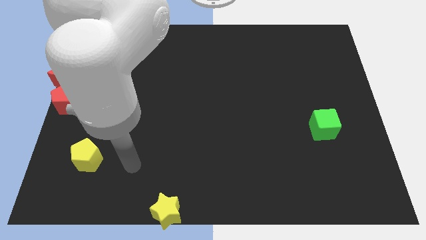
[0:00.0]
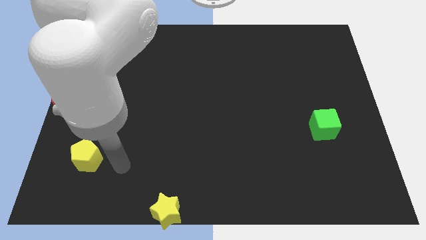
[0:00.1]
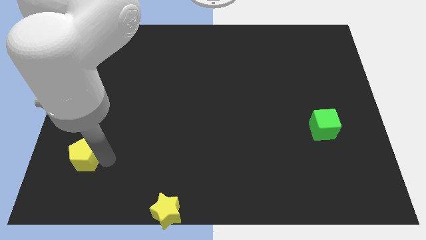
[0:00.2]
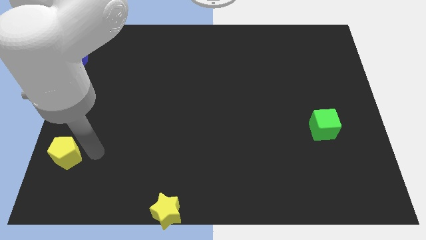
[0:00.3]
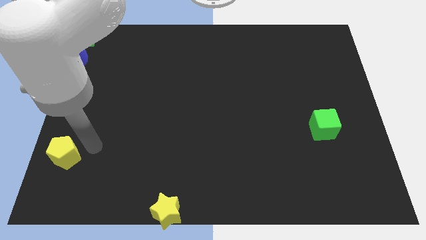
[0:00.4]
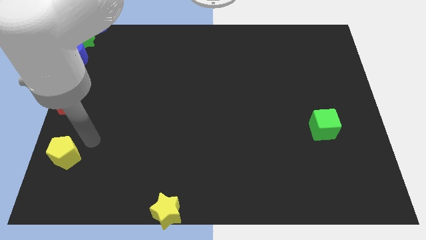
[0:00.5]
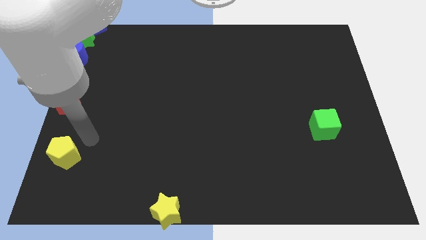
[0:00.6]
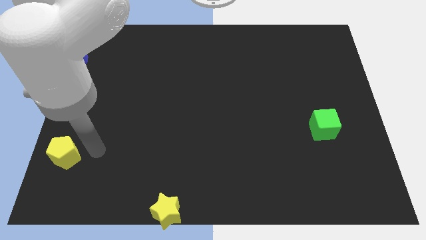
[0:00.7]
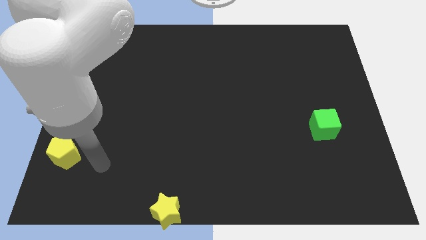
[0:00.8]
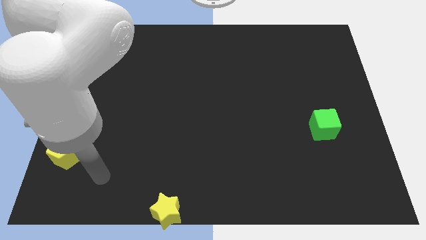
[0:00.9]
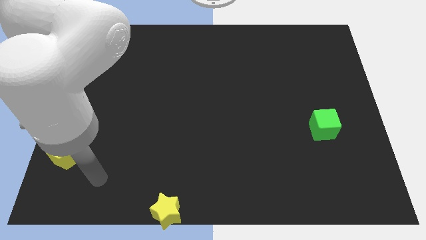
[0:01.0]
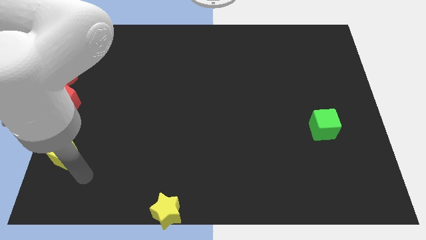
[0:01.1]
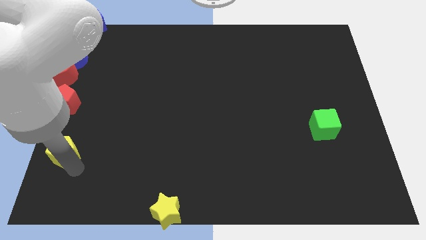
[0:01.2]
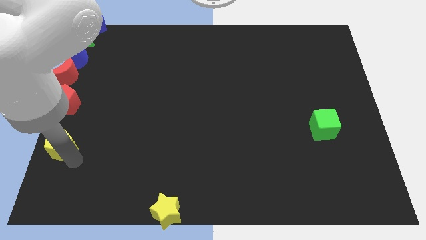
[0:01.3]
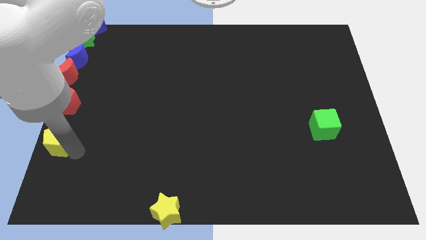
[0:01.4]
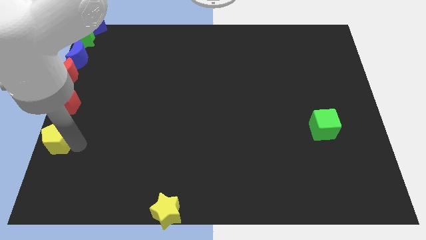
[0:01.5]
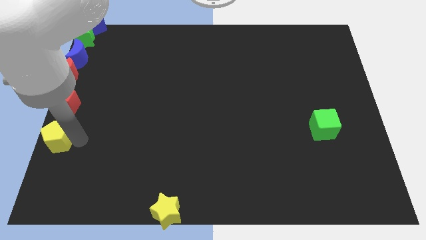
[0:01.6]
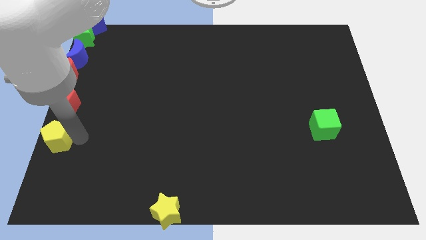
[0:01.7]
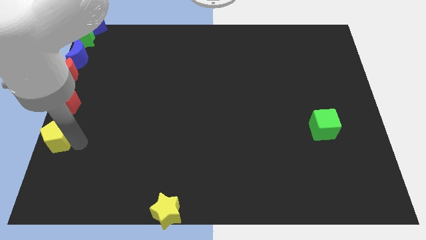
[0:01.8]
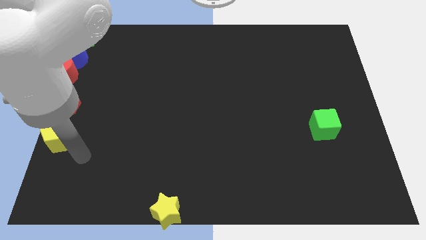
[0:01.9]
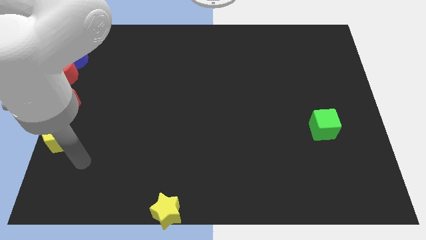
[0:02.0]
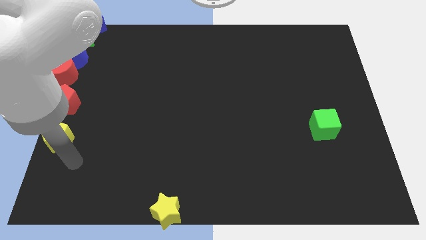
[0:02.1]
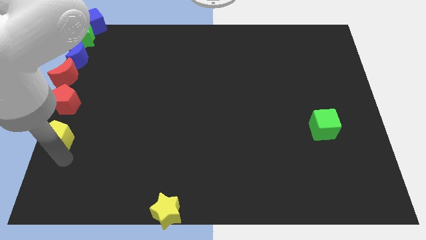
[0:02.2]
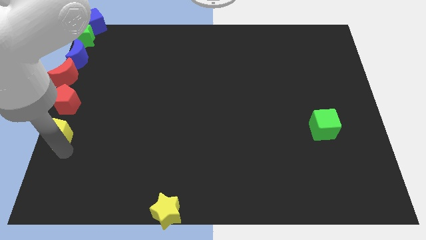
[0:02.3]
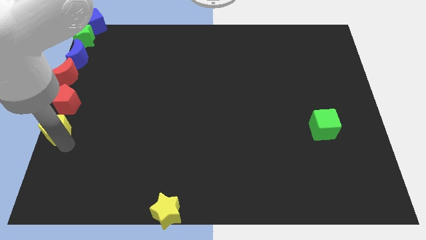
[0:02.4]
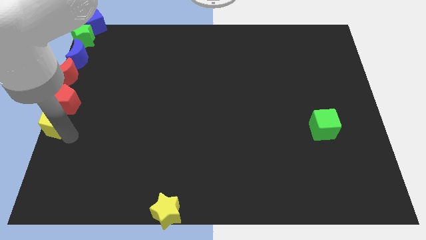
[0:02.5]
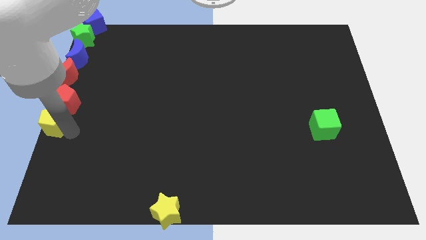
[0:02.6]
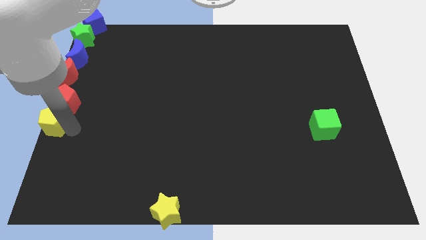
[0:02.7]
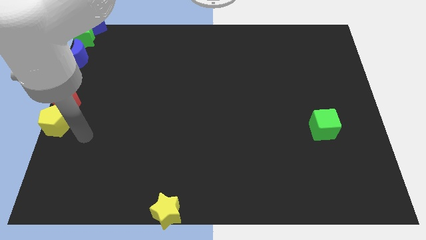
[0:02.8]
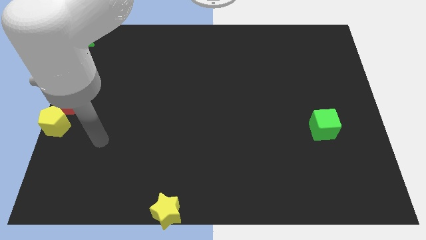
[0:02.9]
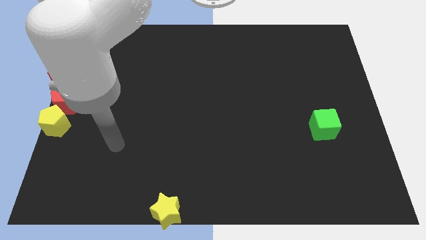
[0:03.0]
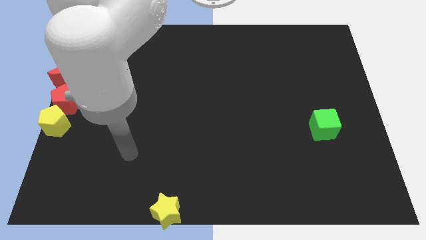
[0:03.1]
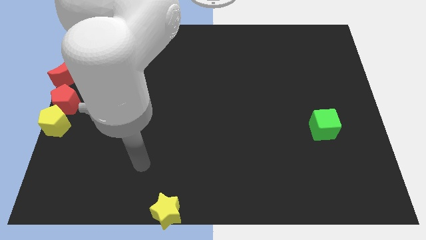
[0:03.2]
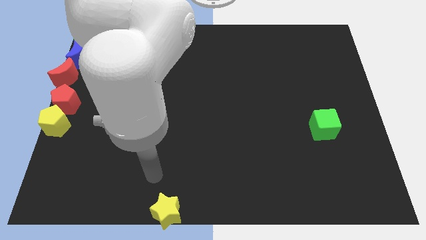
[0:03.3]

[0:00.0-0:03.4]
place the yellow pentagon under the red pentagon

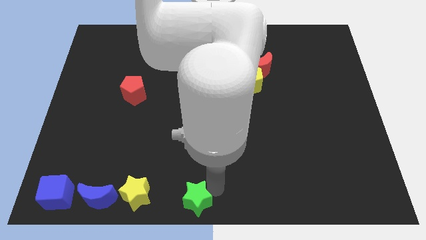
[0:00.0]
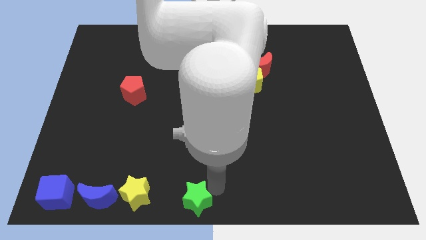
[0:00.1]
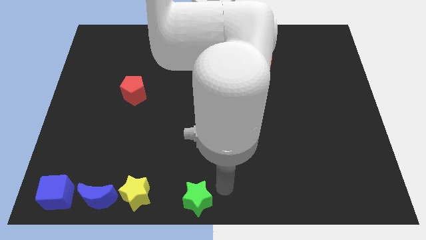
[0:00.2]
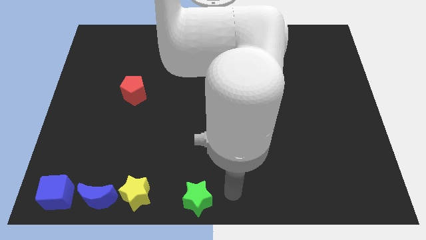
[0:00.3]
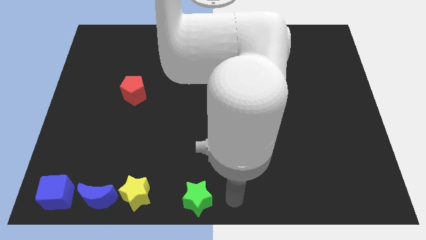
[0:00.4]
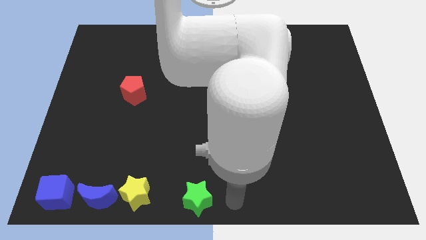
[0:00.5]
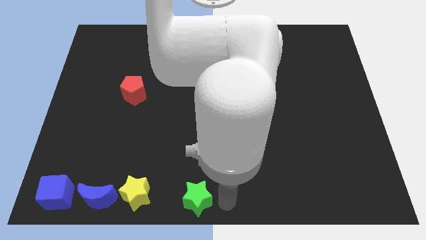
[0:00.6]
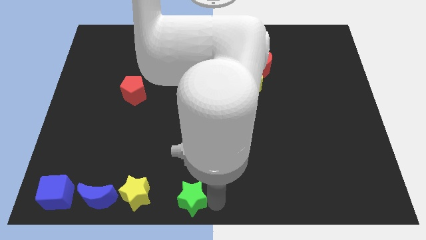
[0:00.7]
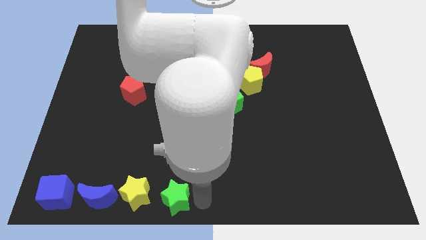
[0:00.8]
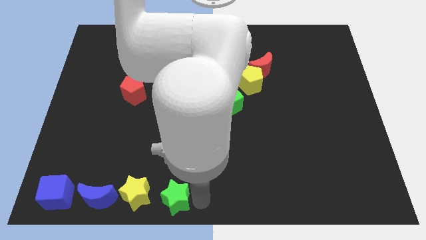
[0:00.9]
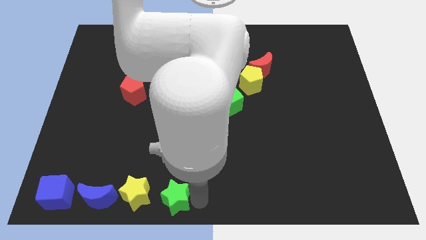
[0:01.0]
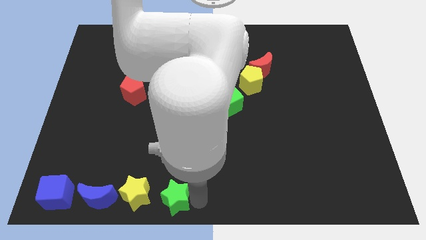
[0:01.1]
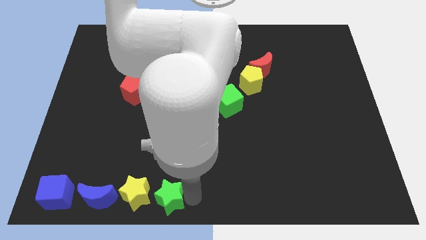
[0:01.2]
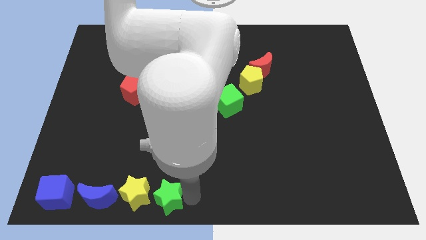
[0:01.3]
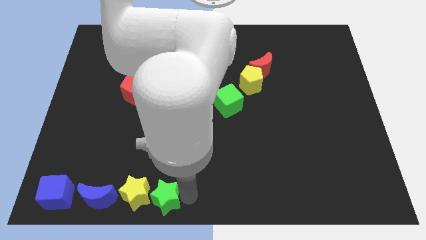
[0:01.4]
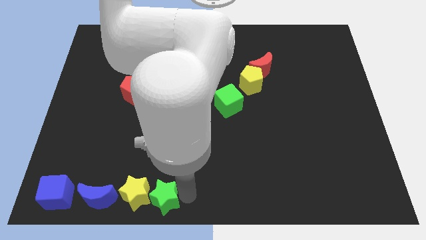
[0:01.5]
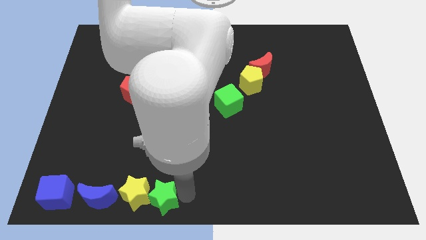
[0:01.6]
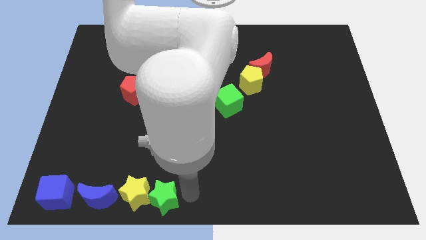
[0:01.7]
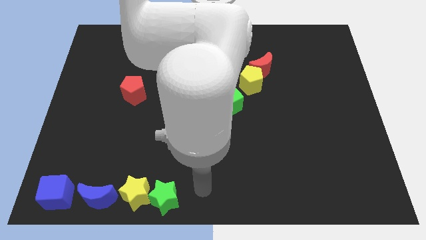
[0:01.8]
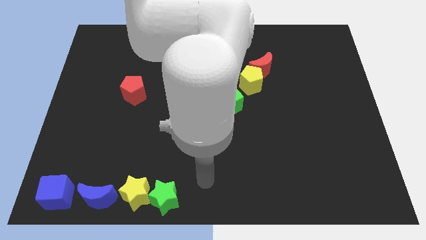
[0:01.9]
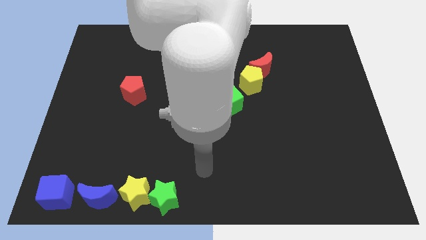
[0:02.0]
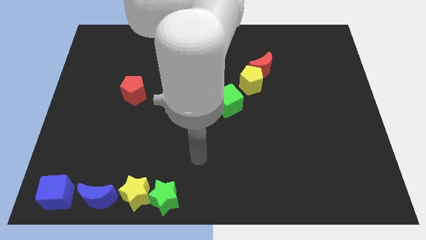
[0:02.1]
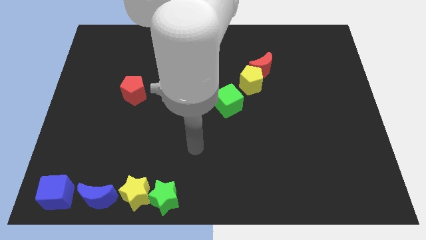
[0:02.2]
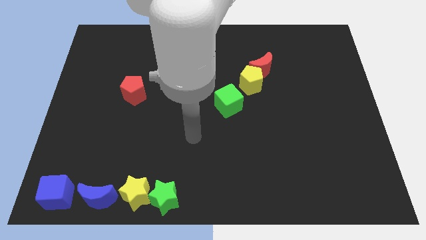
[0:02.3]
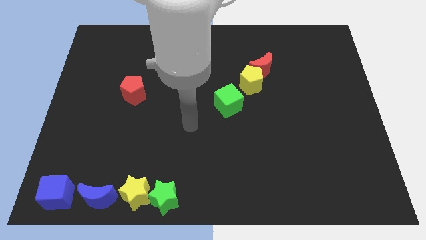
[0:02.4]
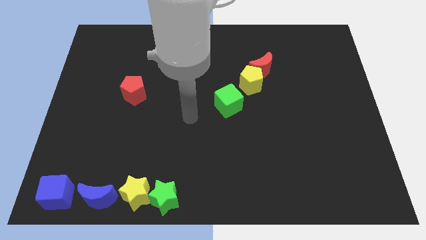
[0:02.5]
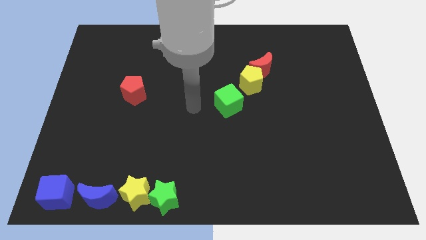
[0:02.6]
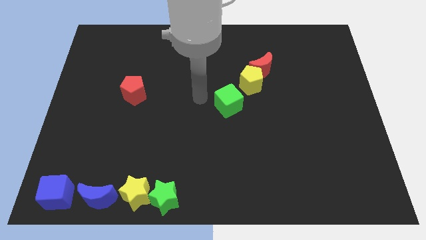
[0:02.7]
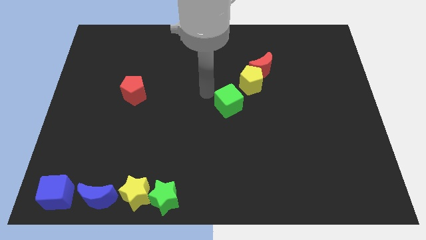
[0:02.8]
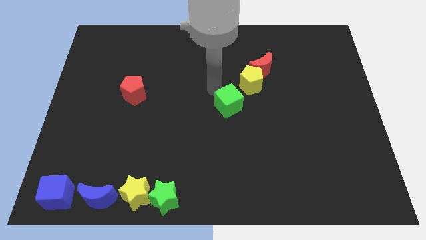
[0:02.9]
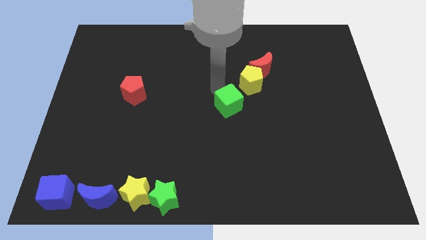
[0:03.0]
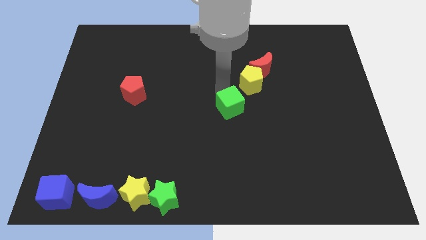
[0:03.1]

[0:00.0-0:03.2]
move the green star close to the yellow star

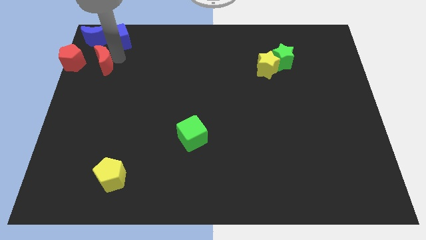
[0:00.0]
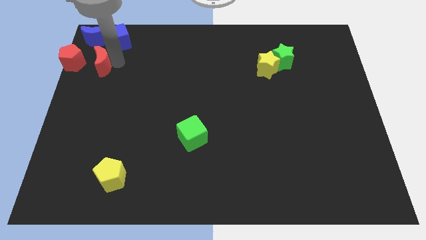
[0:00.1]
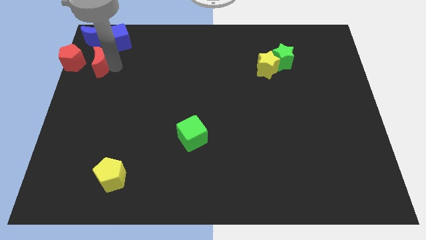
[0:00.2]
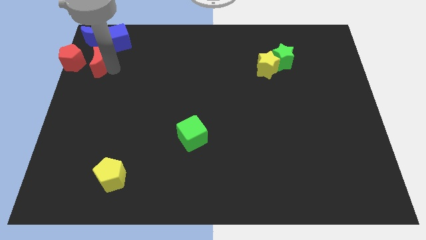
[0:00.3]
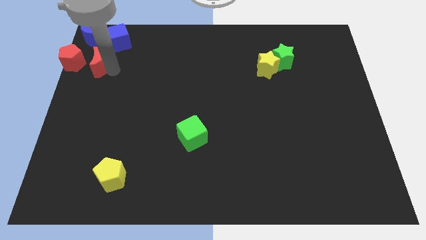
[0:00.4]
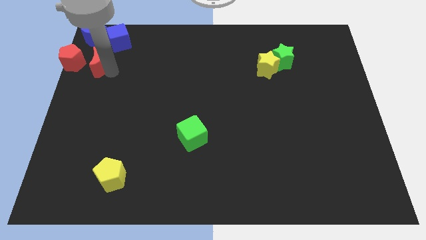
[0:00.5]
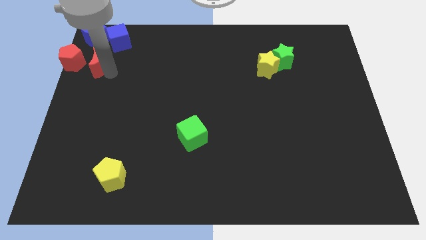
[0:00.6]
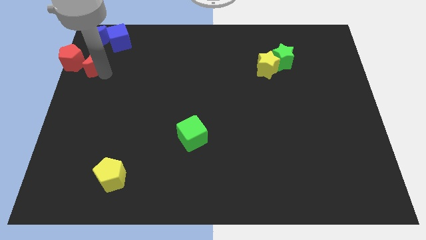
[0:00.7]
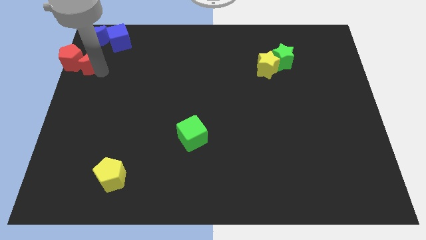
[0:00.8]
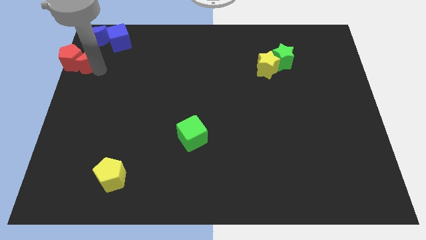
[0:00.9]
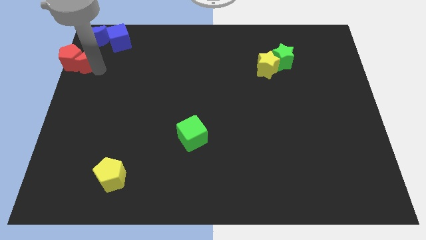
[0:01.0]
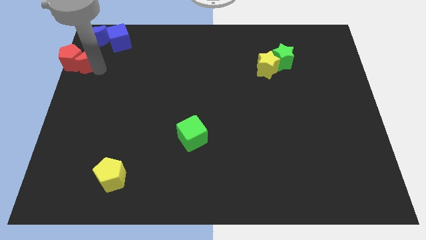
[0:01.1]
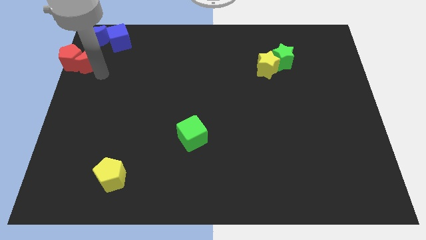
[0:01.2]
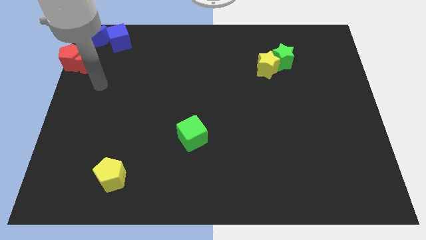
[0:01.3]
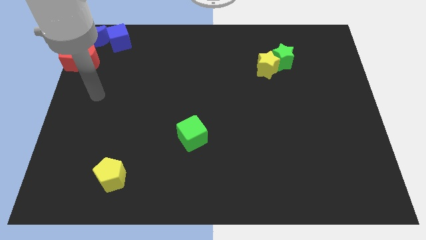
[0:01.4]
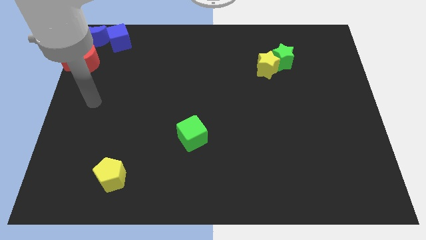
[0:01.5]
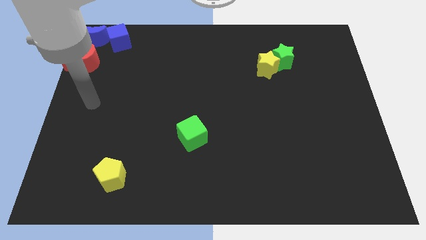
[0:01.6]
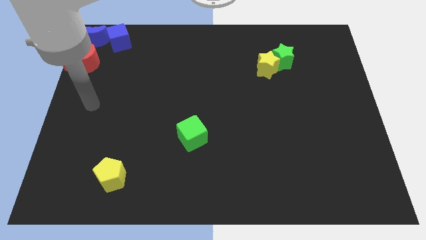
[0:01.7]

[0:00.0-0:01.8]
move the red moon into the red pentagon

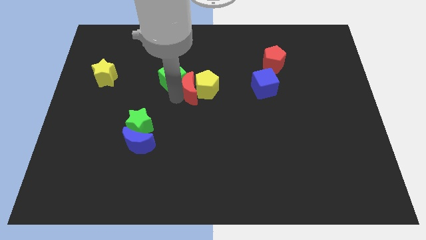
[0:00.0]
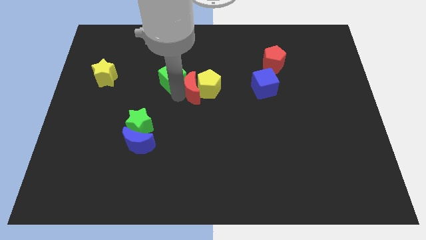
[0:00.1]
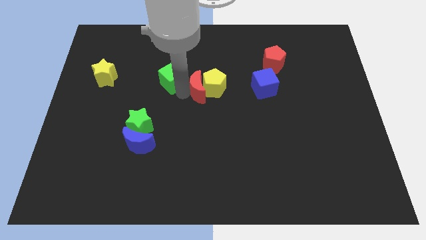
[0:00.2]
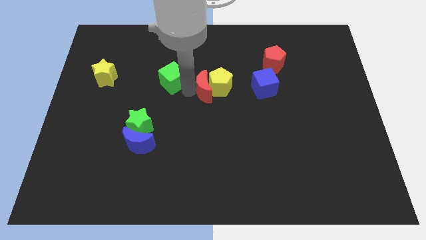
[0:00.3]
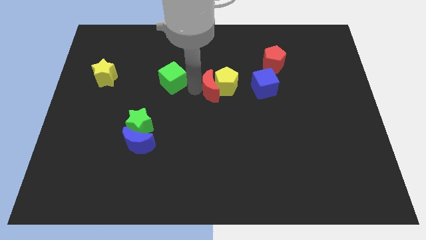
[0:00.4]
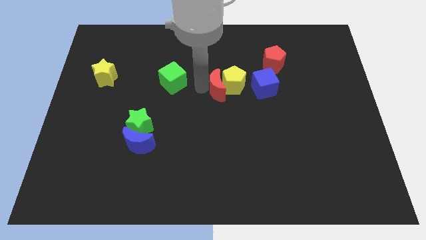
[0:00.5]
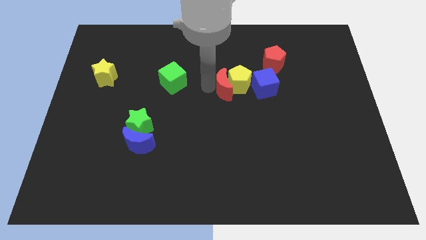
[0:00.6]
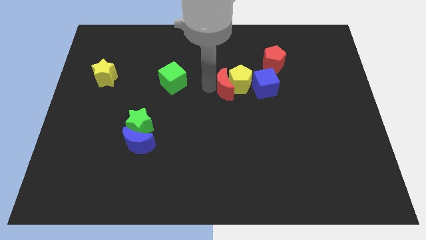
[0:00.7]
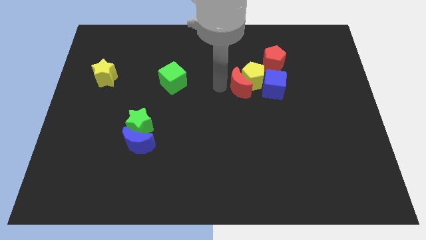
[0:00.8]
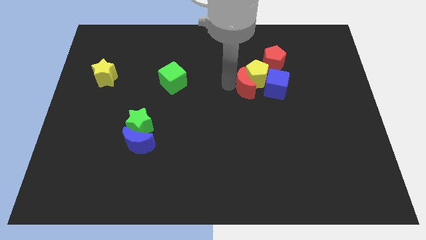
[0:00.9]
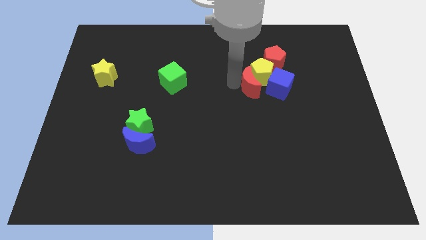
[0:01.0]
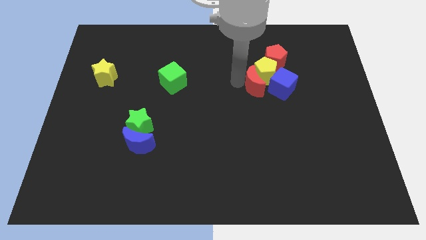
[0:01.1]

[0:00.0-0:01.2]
slide the red crescent slightly to the right
